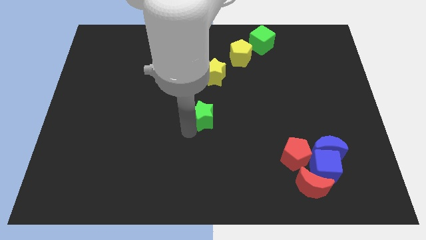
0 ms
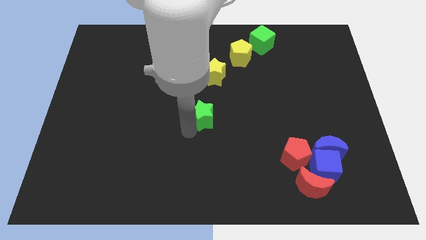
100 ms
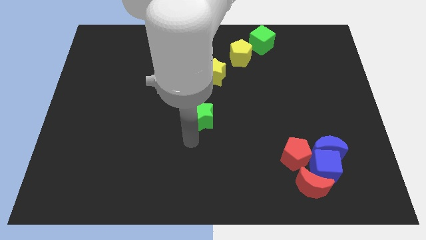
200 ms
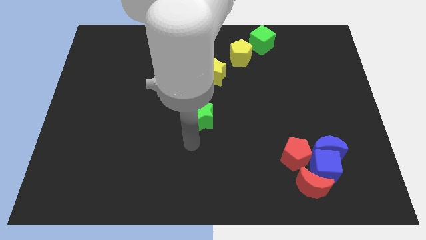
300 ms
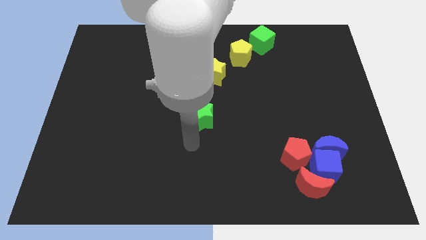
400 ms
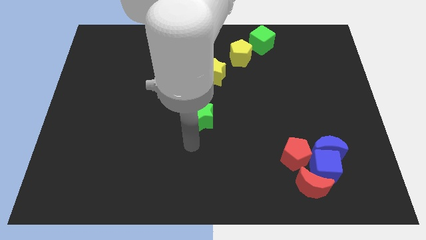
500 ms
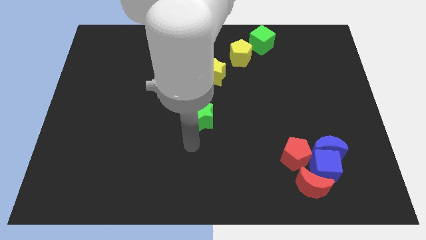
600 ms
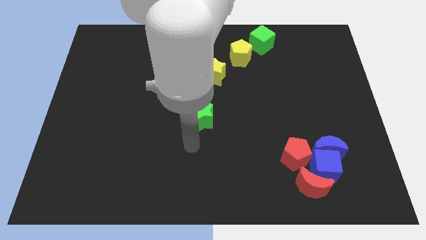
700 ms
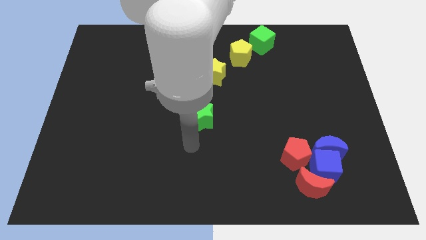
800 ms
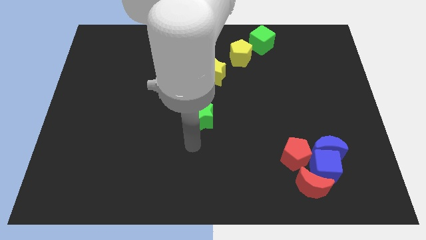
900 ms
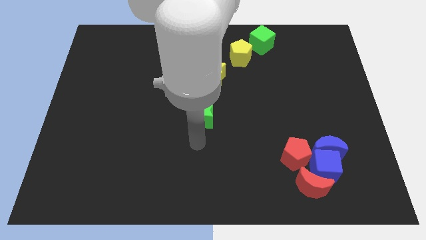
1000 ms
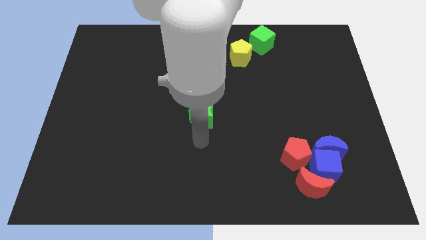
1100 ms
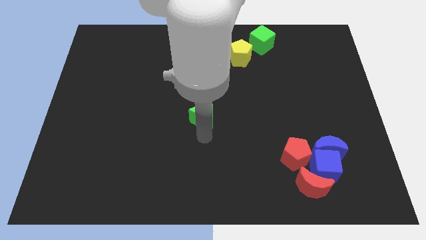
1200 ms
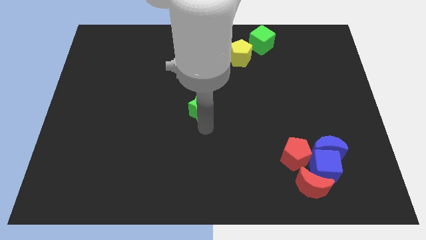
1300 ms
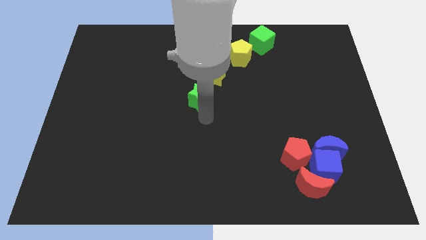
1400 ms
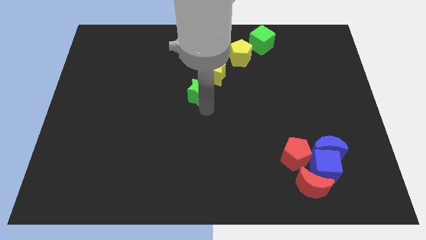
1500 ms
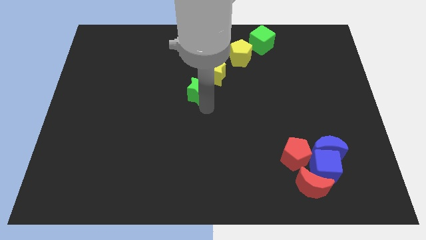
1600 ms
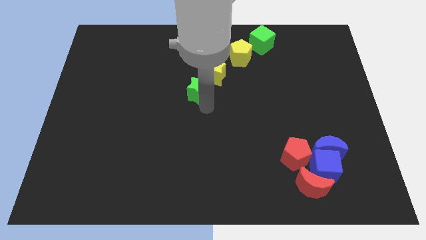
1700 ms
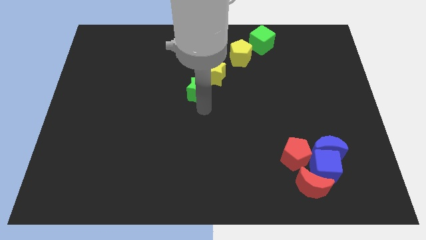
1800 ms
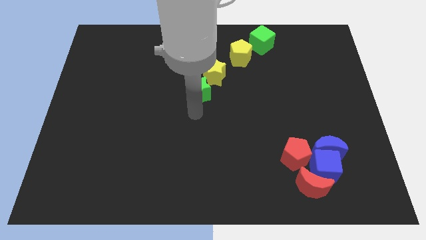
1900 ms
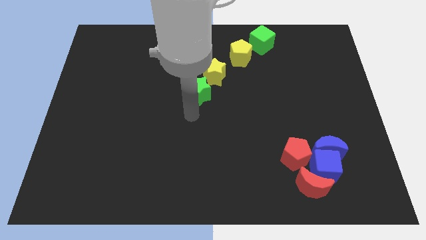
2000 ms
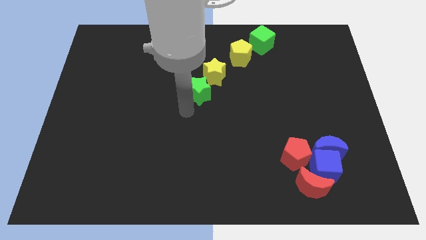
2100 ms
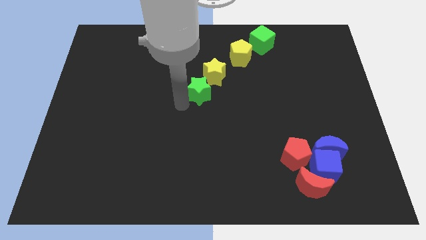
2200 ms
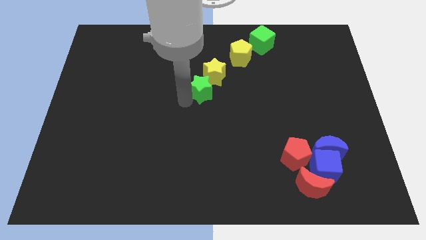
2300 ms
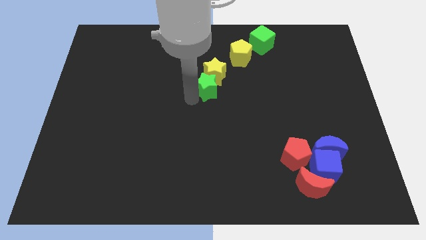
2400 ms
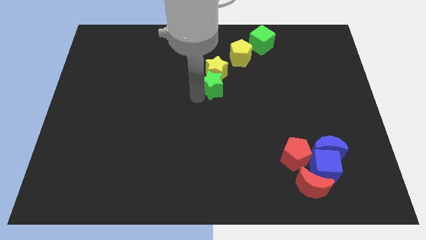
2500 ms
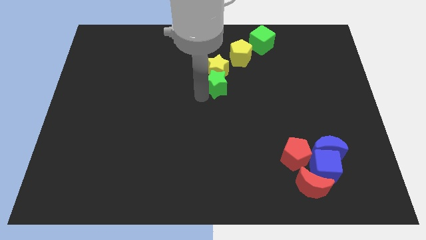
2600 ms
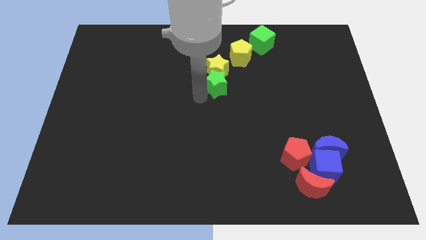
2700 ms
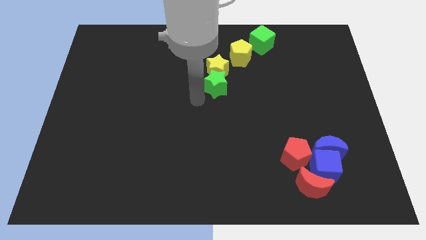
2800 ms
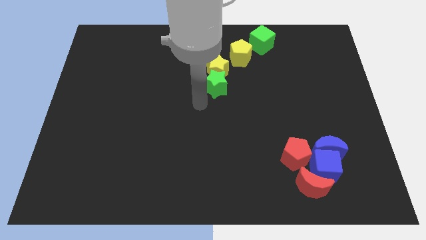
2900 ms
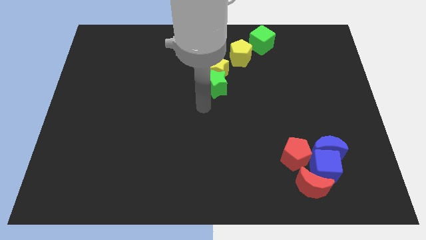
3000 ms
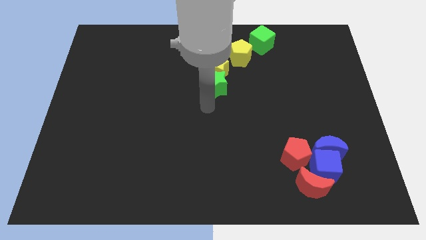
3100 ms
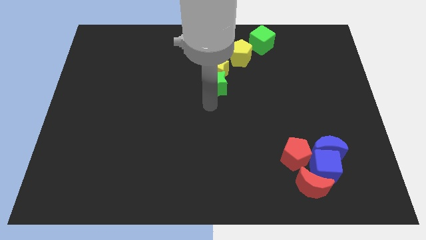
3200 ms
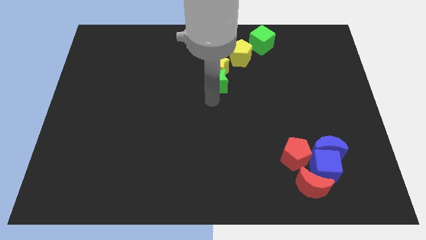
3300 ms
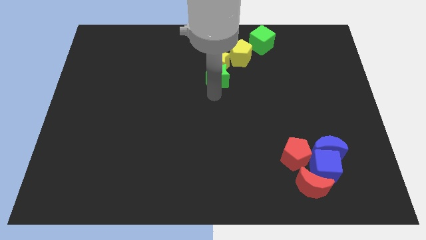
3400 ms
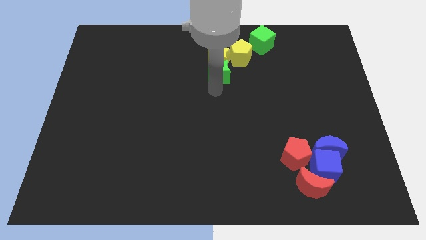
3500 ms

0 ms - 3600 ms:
put the green star into the yellow star

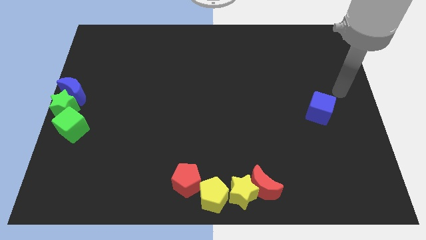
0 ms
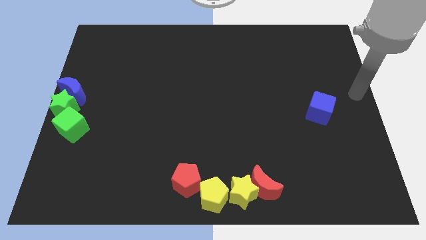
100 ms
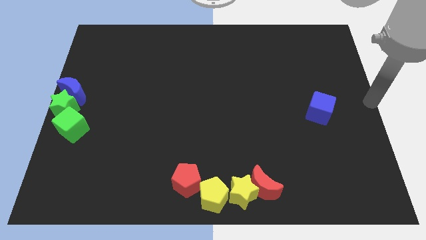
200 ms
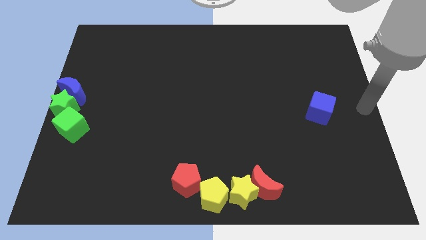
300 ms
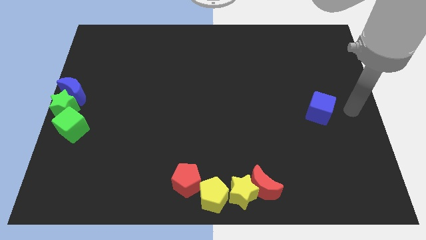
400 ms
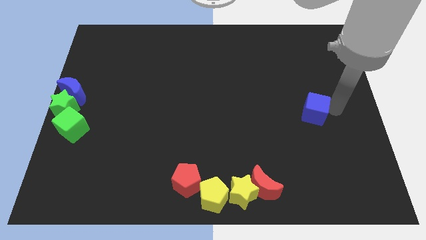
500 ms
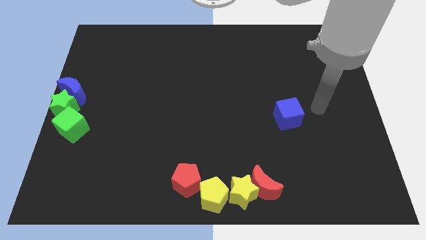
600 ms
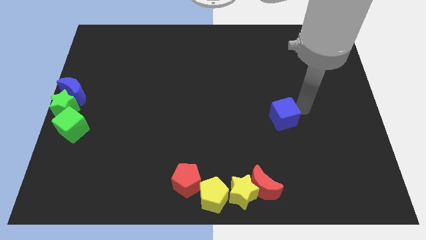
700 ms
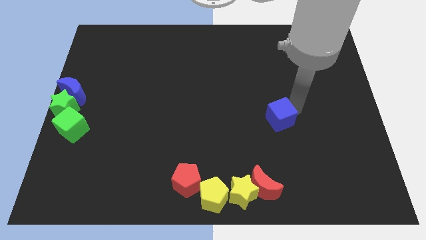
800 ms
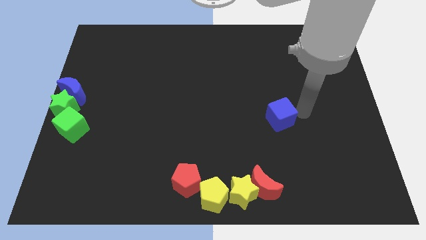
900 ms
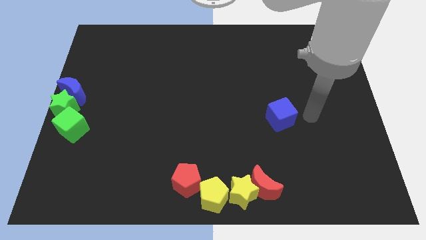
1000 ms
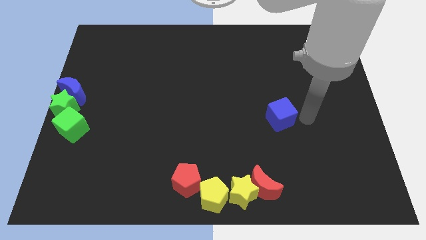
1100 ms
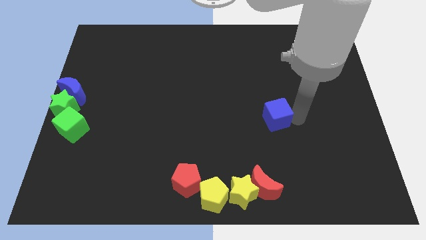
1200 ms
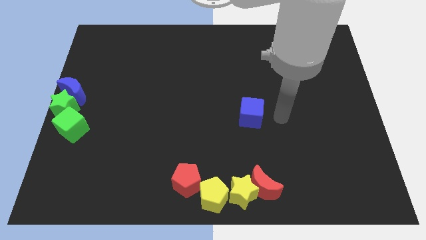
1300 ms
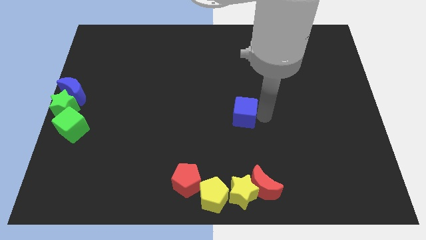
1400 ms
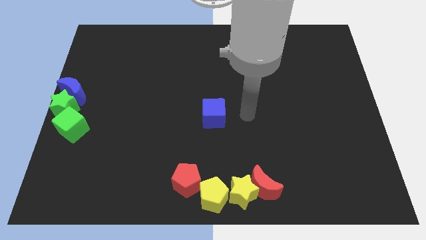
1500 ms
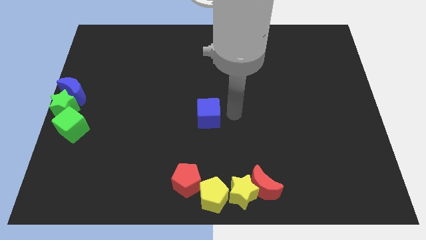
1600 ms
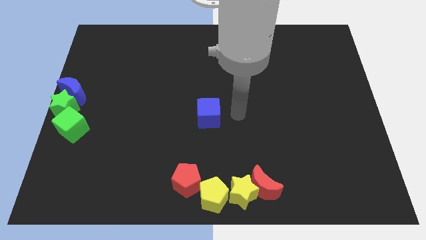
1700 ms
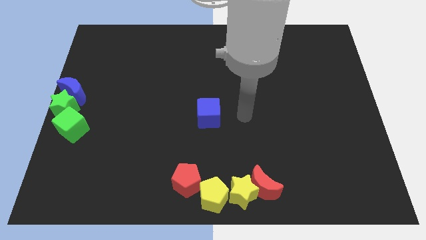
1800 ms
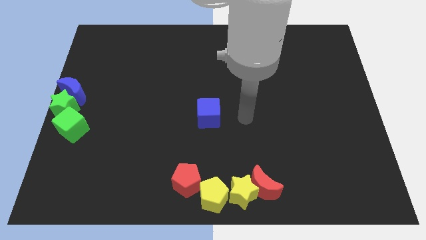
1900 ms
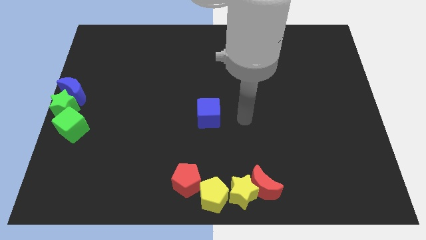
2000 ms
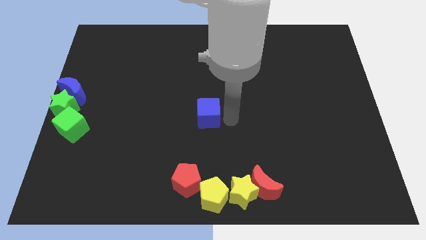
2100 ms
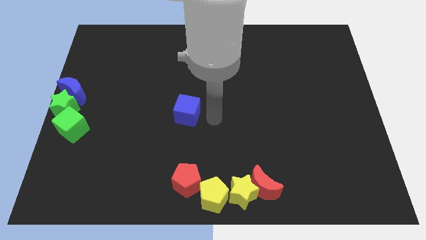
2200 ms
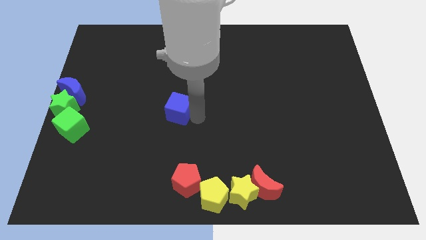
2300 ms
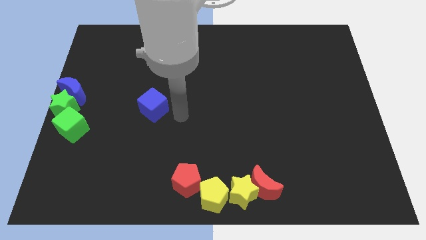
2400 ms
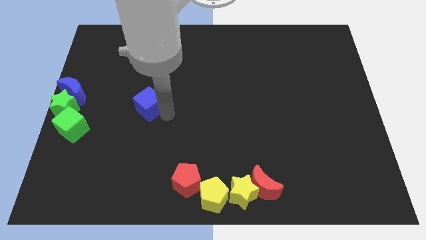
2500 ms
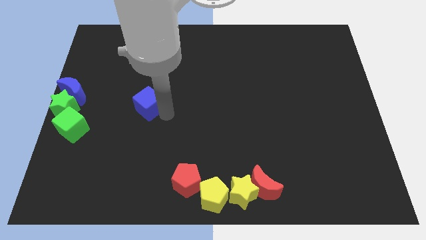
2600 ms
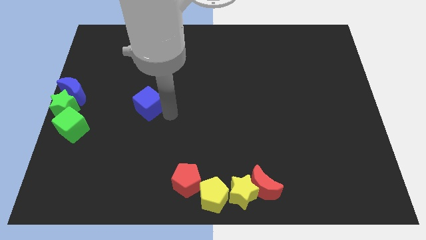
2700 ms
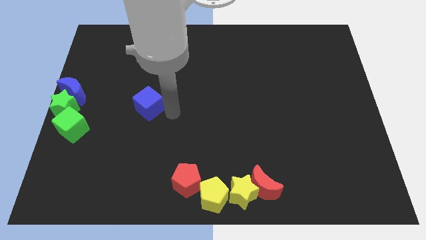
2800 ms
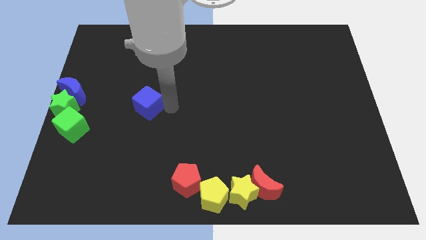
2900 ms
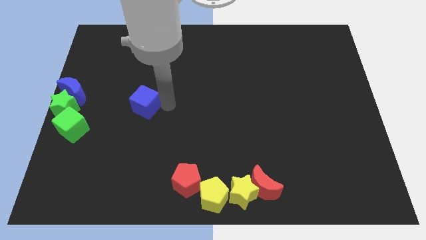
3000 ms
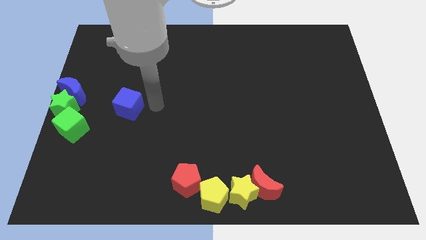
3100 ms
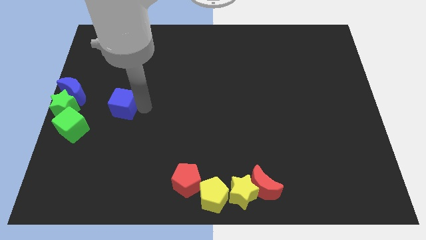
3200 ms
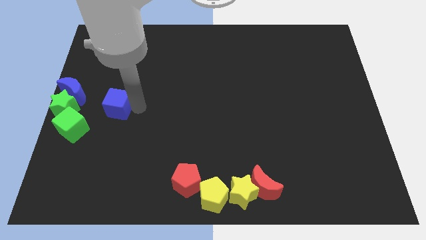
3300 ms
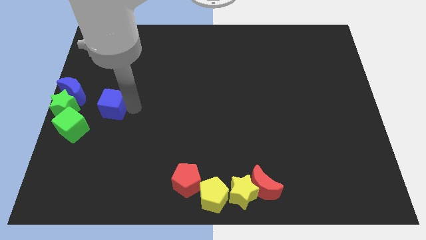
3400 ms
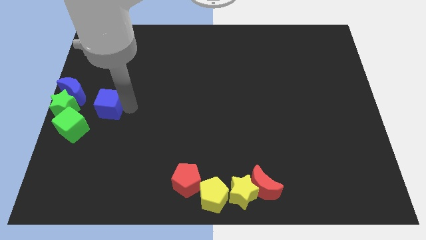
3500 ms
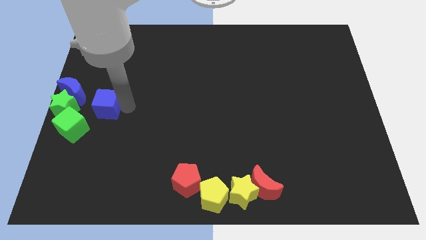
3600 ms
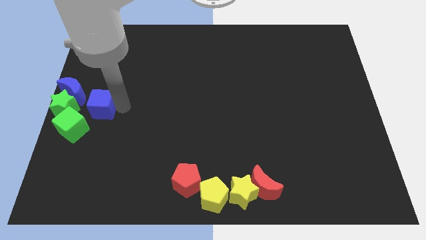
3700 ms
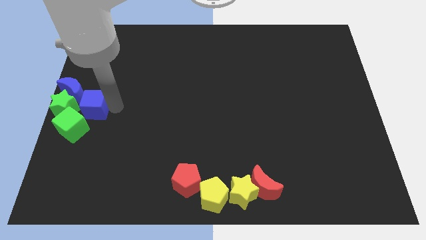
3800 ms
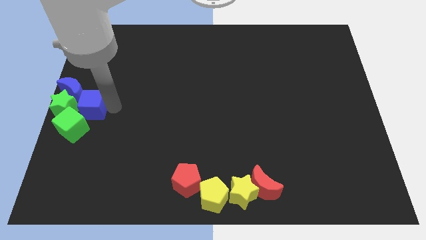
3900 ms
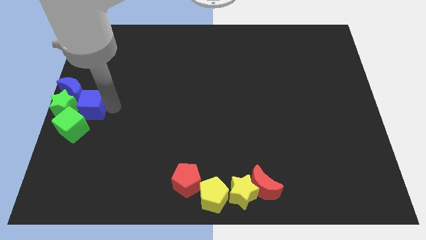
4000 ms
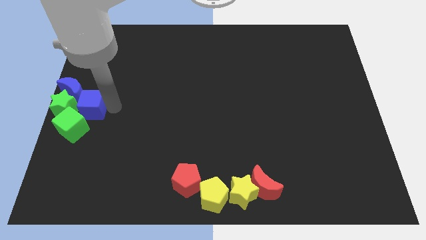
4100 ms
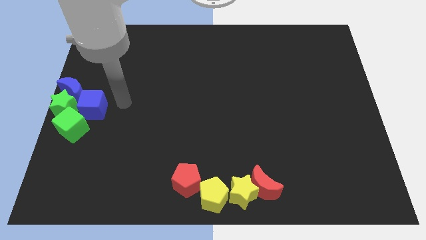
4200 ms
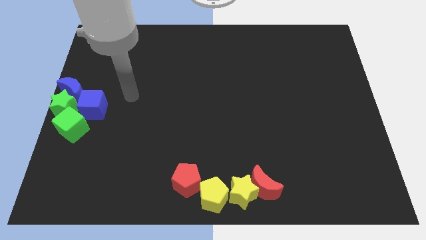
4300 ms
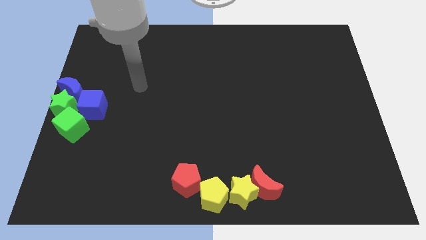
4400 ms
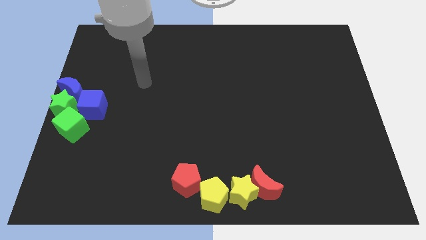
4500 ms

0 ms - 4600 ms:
push the blue cube close to the green star and blue crescent

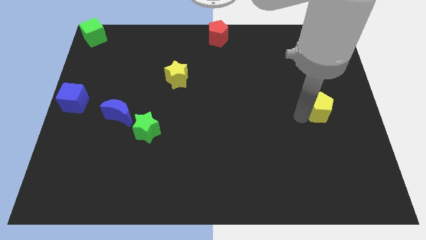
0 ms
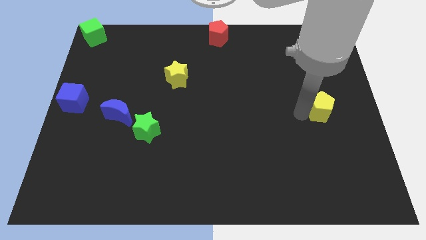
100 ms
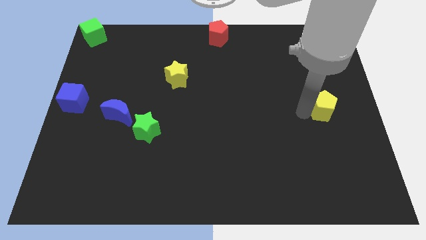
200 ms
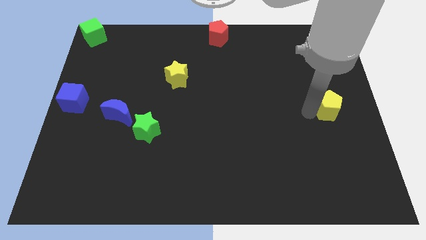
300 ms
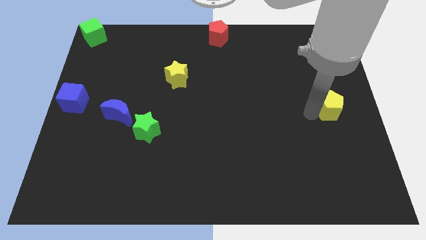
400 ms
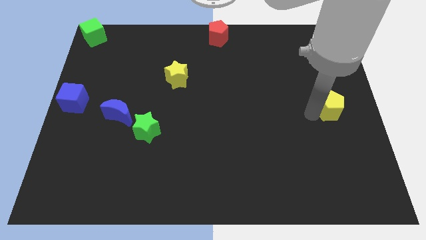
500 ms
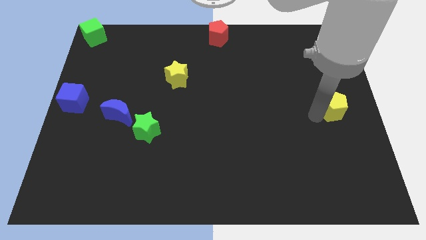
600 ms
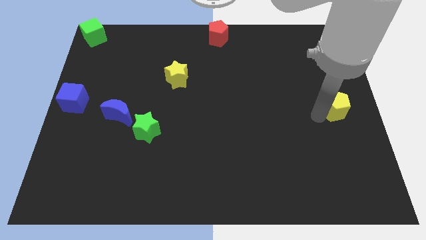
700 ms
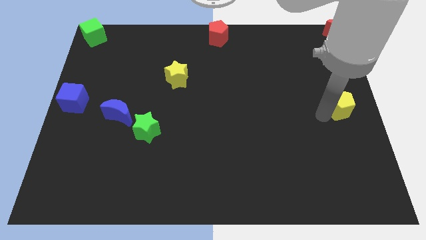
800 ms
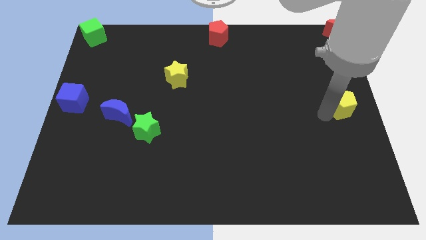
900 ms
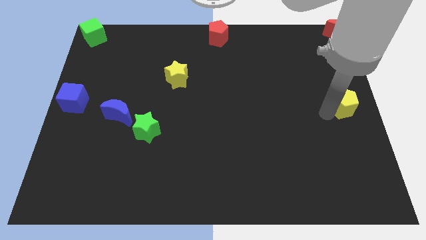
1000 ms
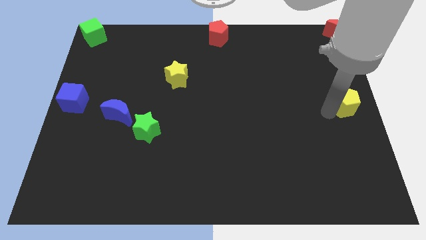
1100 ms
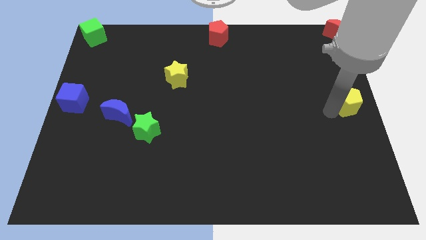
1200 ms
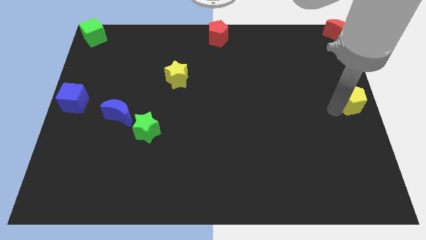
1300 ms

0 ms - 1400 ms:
push the yellow pentagon towards the center right of the board
